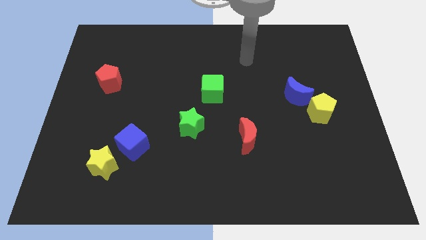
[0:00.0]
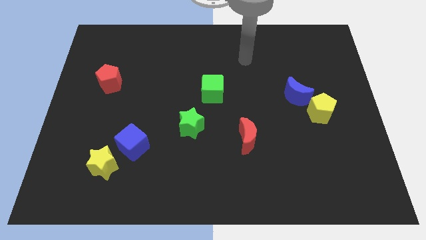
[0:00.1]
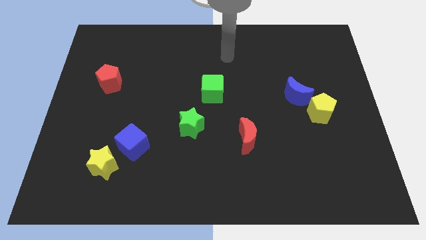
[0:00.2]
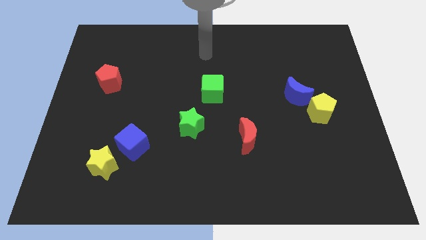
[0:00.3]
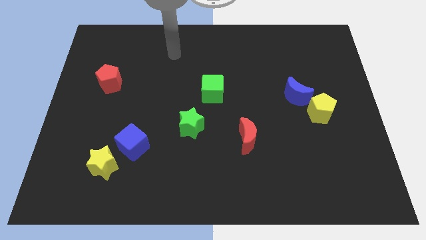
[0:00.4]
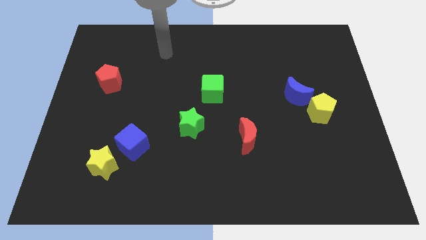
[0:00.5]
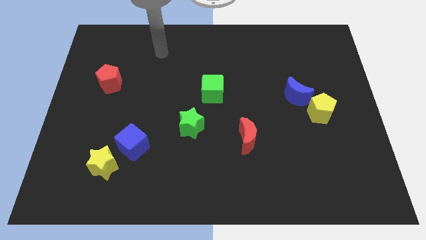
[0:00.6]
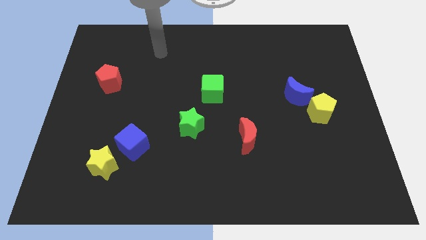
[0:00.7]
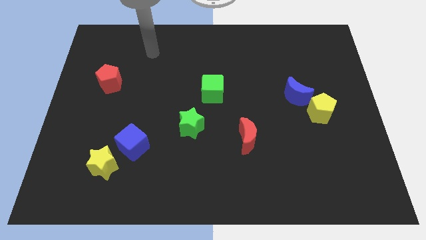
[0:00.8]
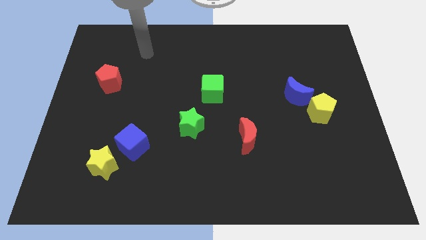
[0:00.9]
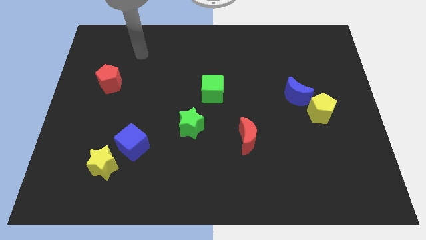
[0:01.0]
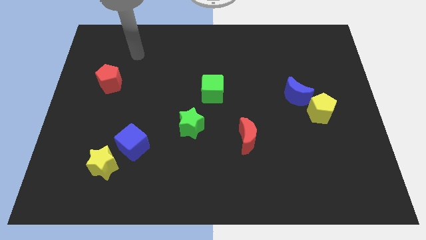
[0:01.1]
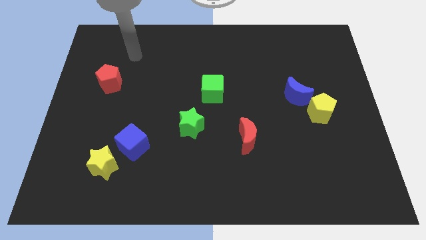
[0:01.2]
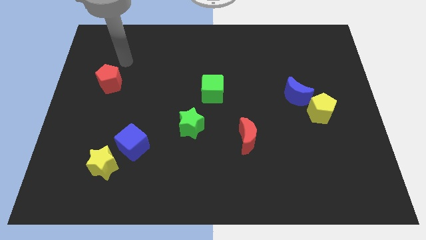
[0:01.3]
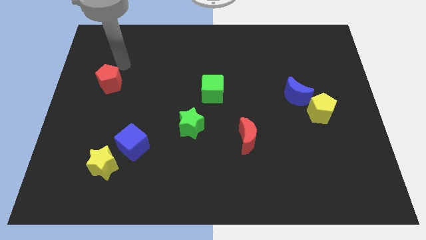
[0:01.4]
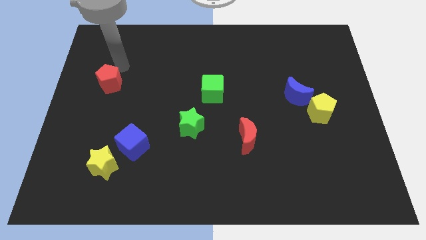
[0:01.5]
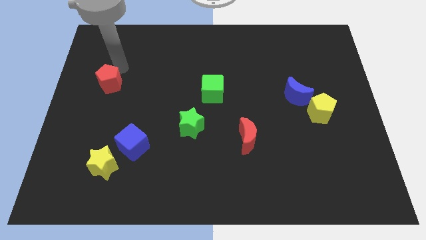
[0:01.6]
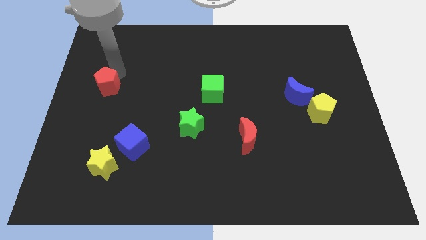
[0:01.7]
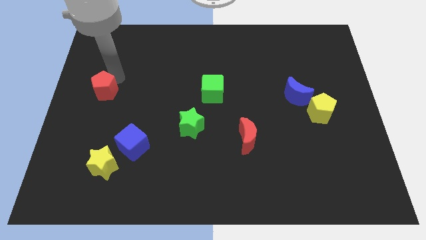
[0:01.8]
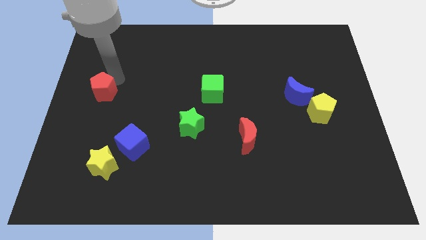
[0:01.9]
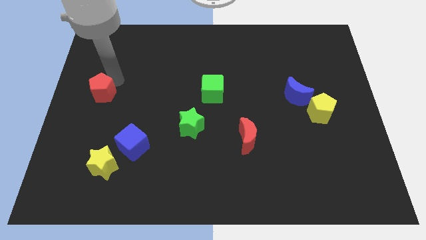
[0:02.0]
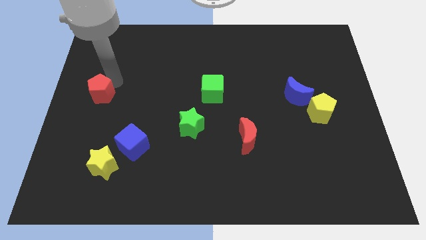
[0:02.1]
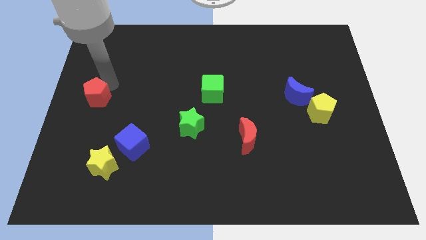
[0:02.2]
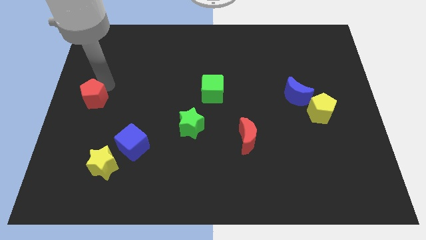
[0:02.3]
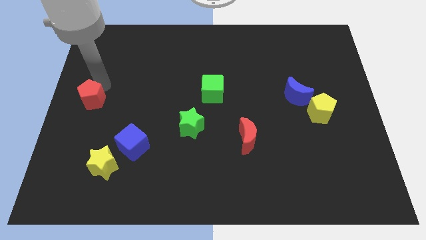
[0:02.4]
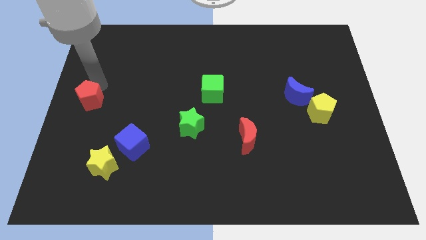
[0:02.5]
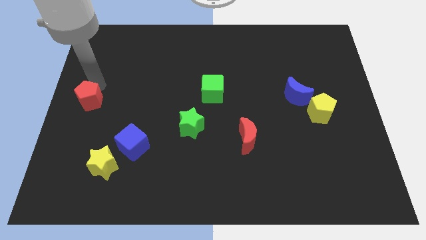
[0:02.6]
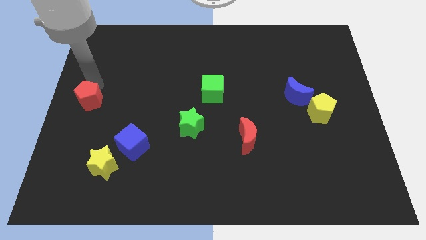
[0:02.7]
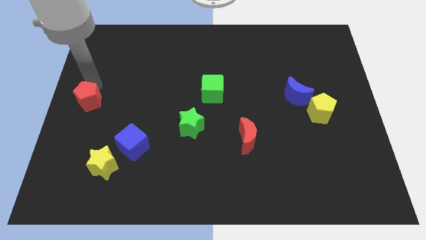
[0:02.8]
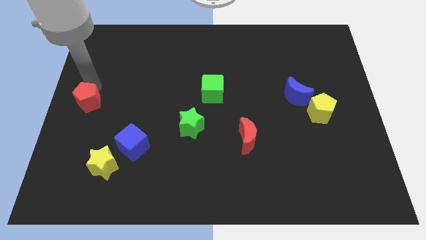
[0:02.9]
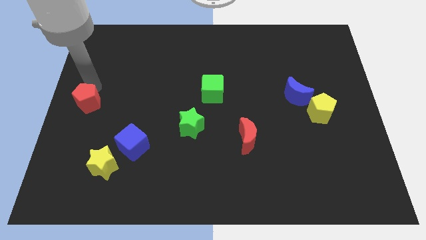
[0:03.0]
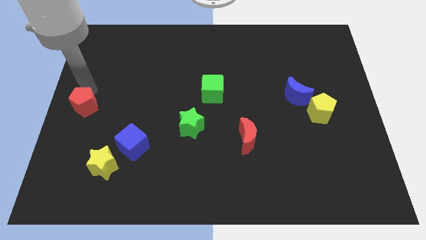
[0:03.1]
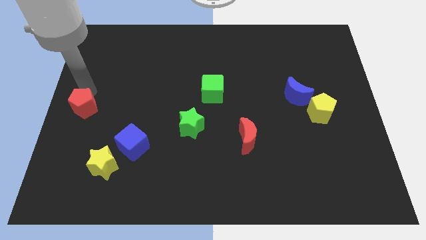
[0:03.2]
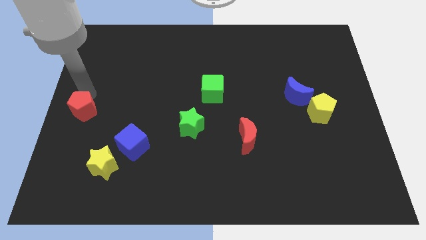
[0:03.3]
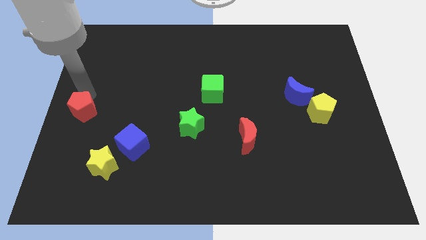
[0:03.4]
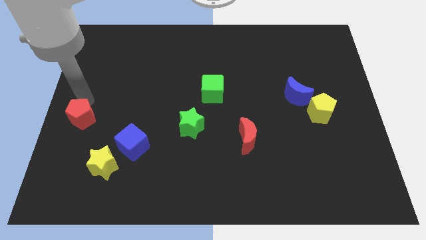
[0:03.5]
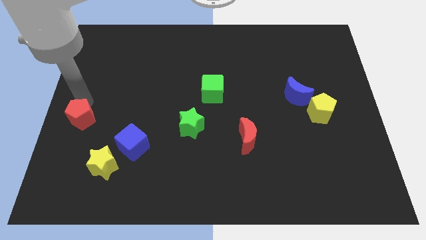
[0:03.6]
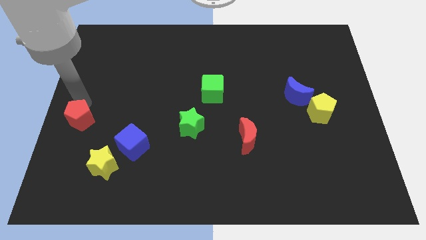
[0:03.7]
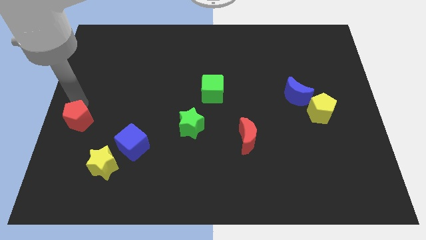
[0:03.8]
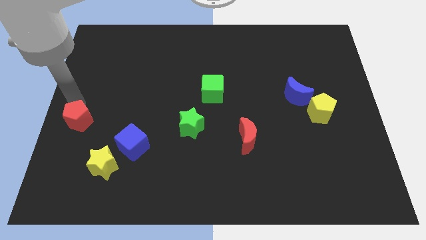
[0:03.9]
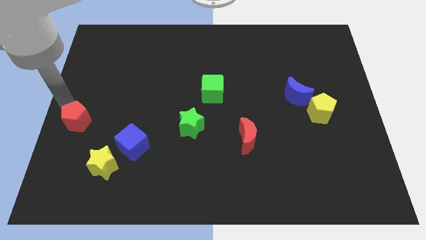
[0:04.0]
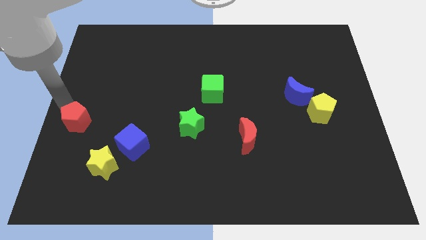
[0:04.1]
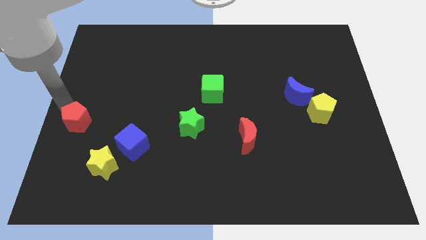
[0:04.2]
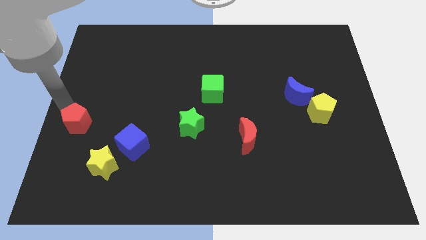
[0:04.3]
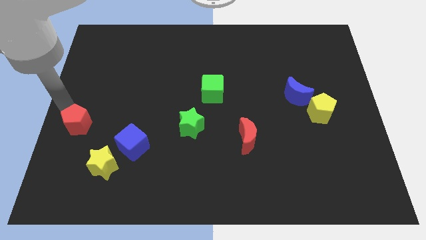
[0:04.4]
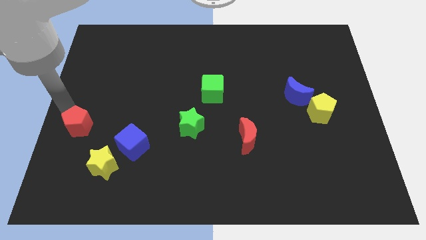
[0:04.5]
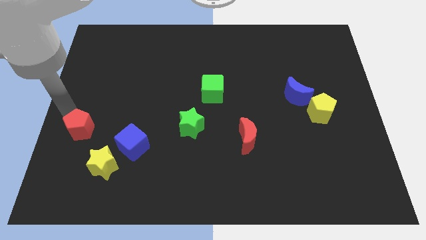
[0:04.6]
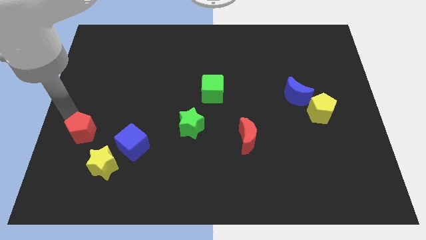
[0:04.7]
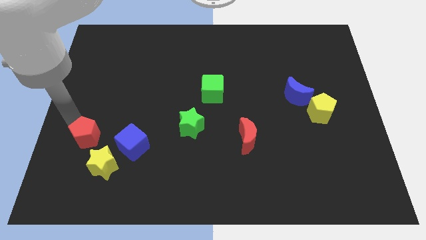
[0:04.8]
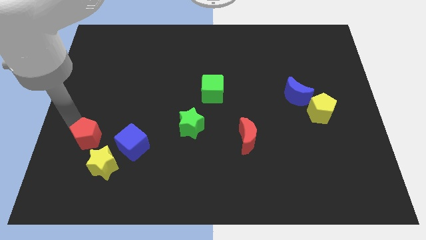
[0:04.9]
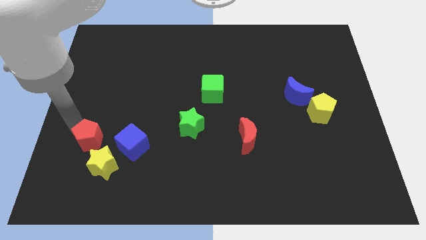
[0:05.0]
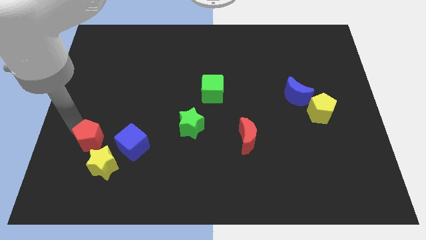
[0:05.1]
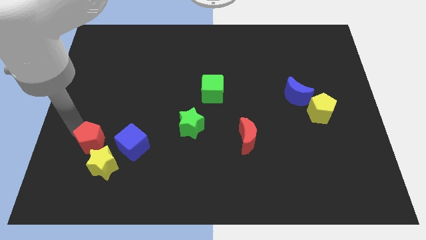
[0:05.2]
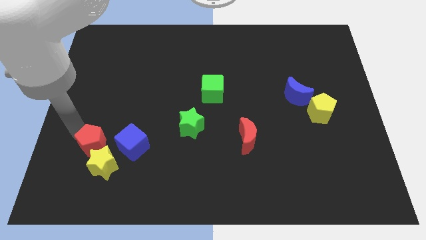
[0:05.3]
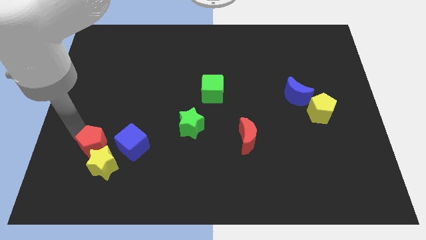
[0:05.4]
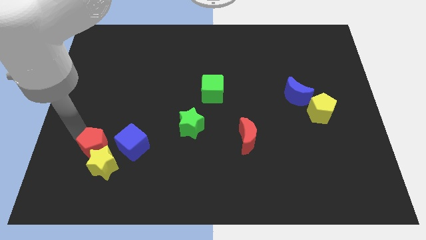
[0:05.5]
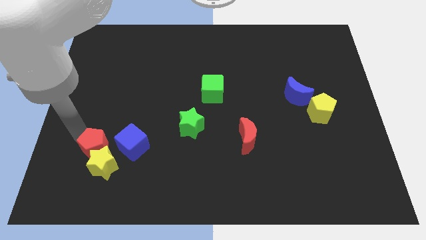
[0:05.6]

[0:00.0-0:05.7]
move the red pentagon next to the yellow star

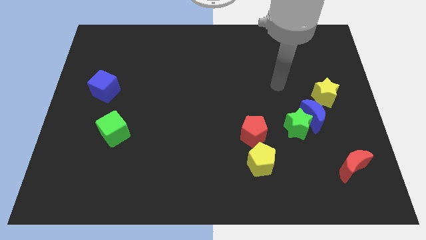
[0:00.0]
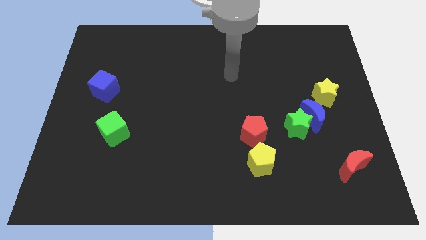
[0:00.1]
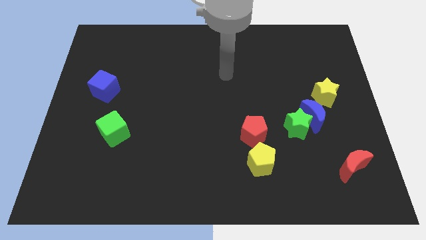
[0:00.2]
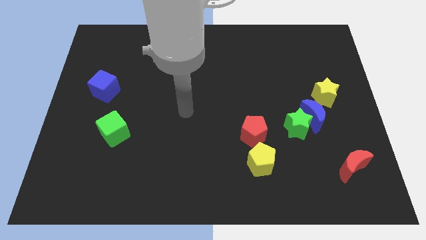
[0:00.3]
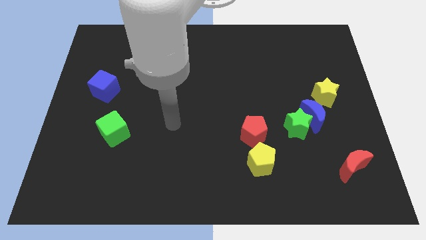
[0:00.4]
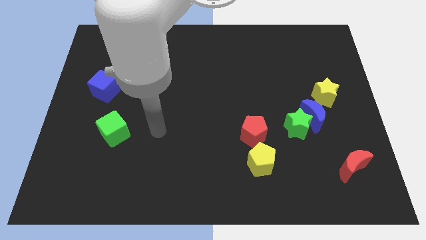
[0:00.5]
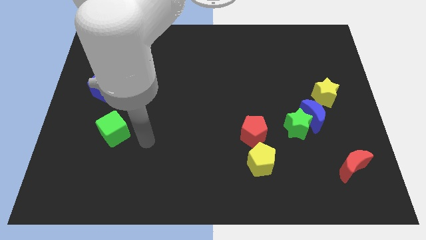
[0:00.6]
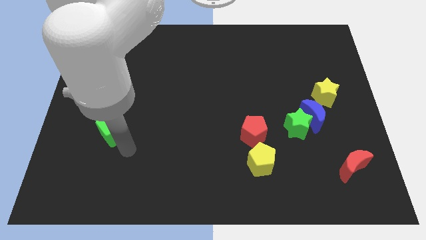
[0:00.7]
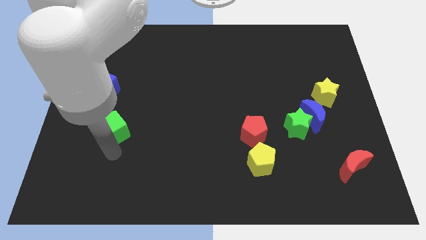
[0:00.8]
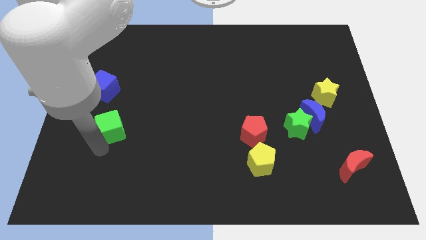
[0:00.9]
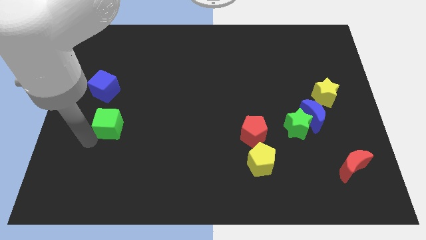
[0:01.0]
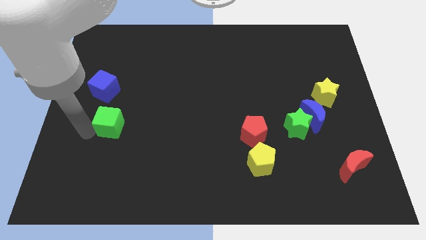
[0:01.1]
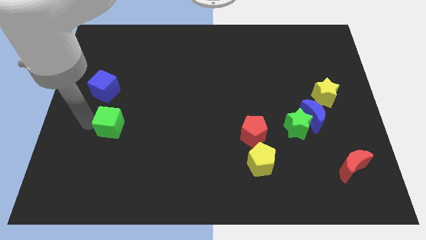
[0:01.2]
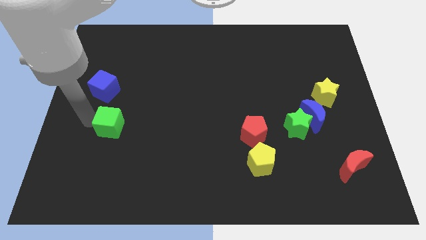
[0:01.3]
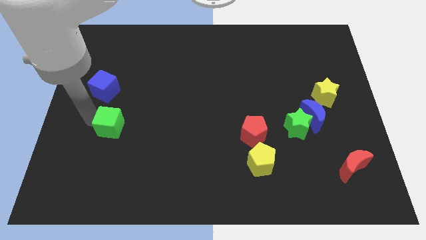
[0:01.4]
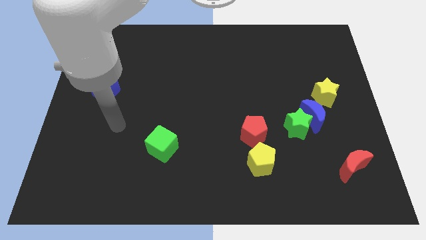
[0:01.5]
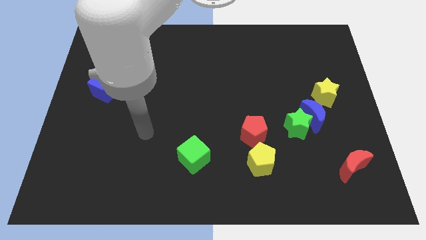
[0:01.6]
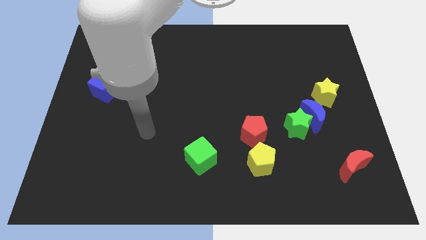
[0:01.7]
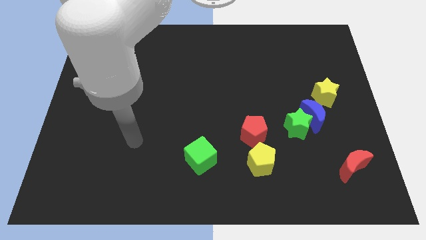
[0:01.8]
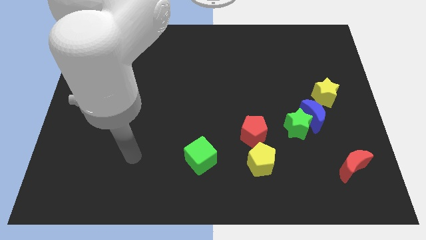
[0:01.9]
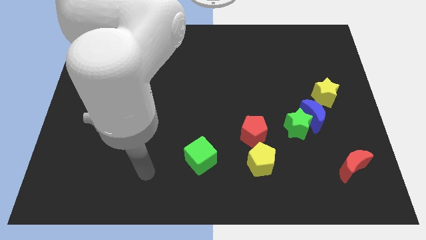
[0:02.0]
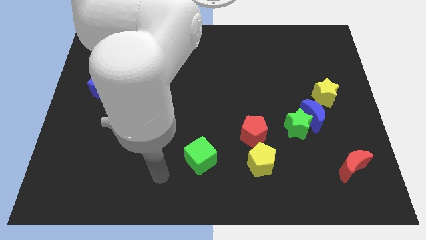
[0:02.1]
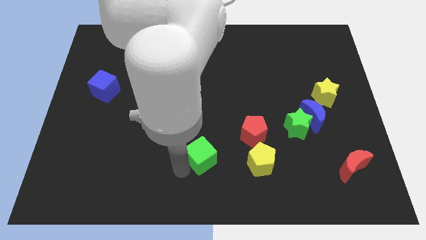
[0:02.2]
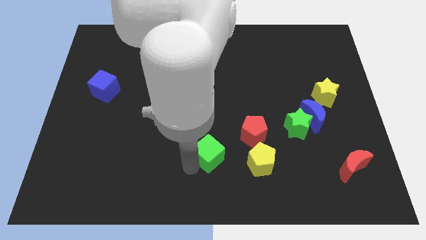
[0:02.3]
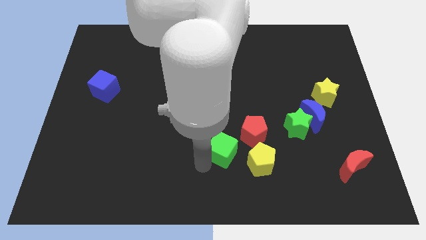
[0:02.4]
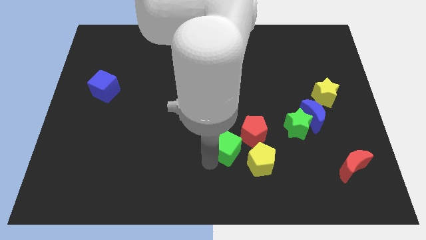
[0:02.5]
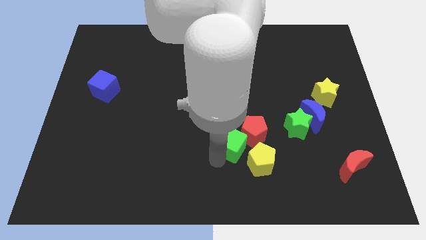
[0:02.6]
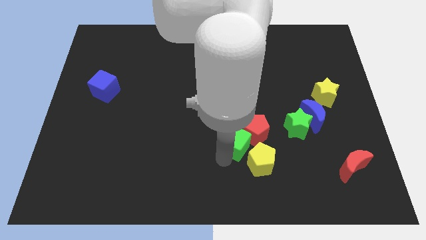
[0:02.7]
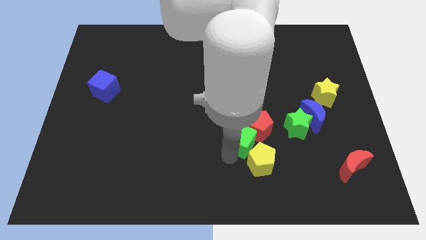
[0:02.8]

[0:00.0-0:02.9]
slide the green cube close to the red pentagon
